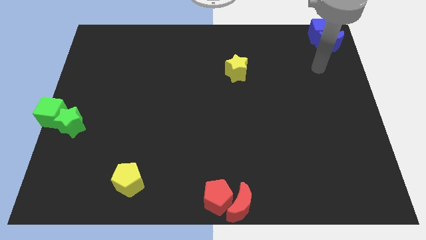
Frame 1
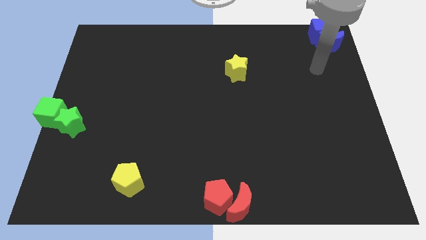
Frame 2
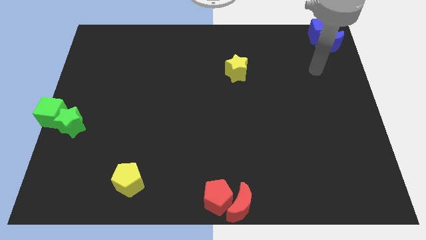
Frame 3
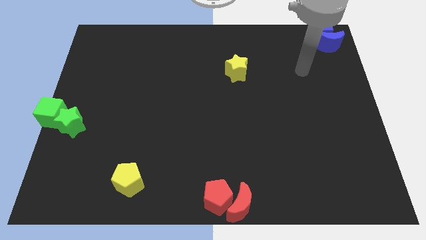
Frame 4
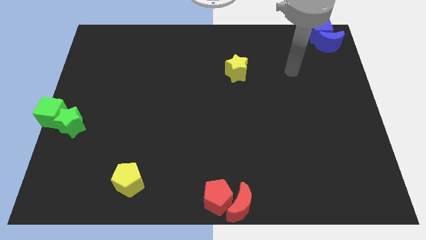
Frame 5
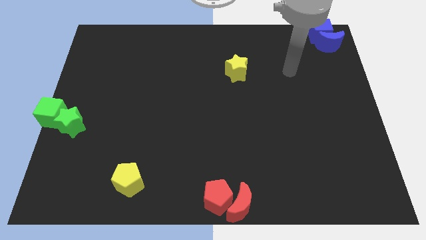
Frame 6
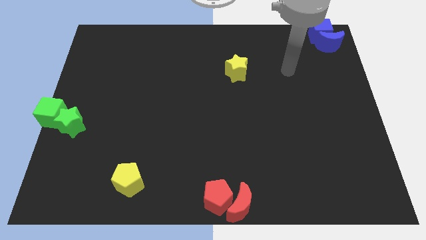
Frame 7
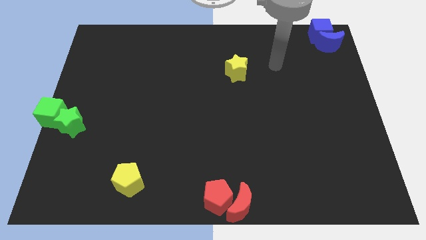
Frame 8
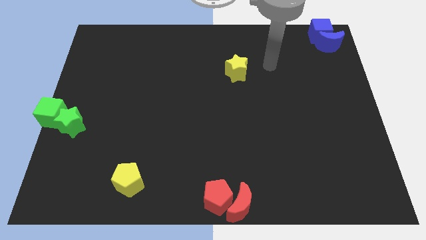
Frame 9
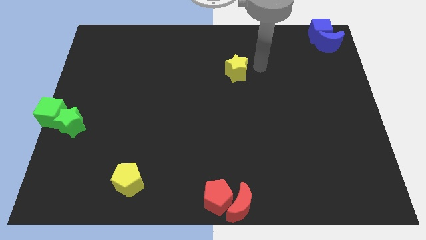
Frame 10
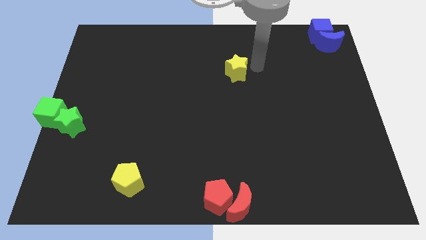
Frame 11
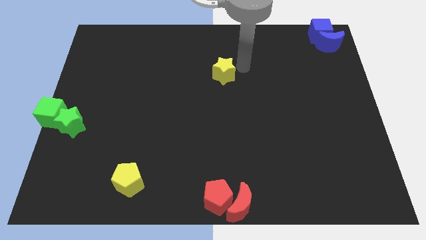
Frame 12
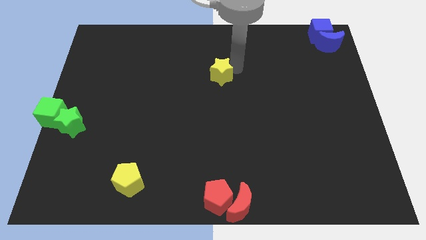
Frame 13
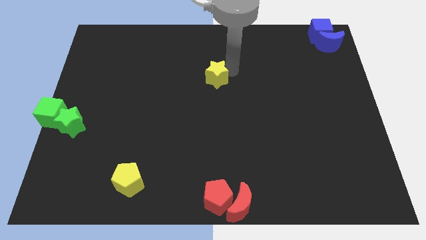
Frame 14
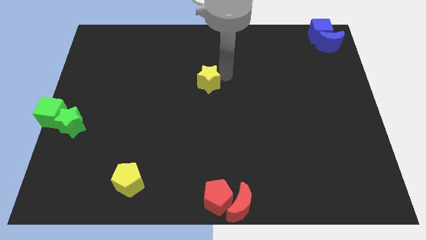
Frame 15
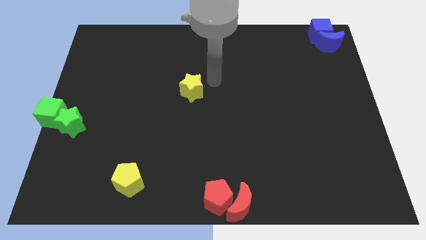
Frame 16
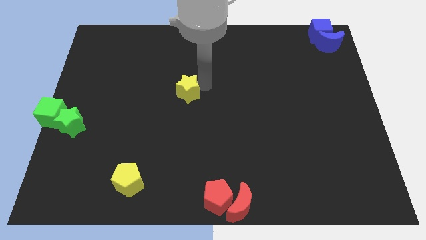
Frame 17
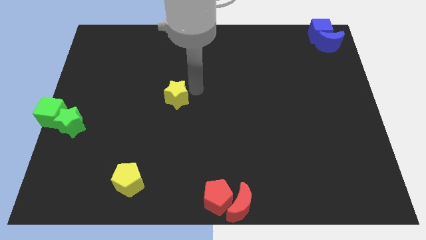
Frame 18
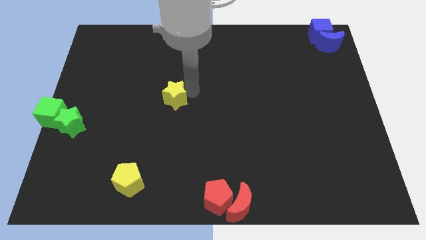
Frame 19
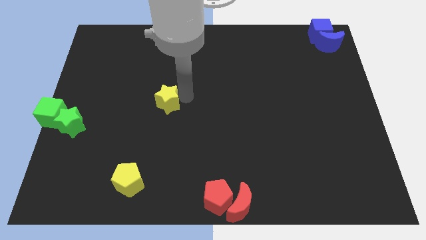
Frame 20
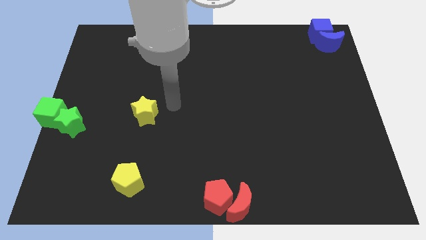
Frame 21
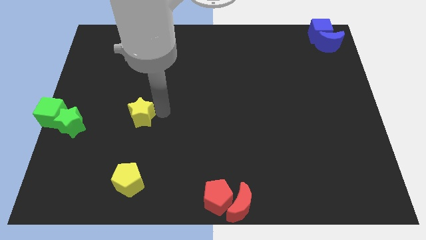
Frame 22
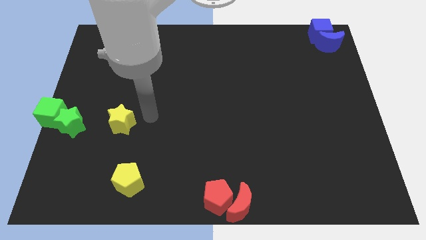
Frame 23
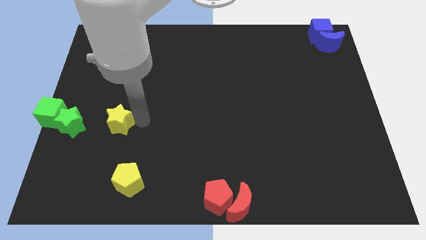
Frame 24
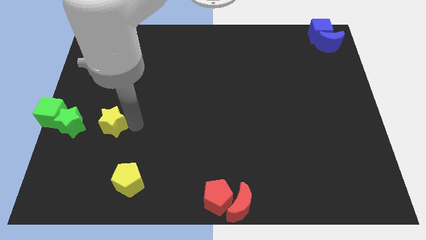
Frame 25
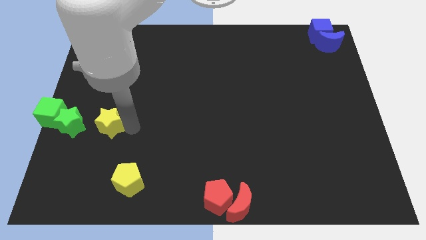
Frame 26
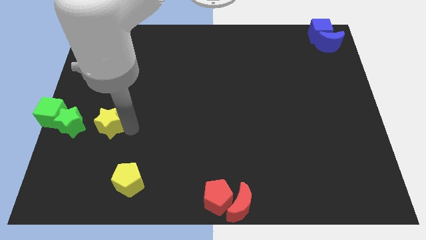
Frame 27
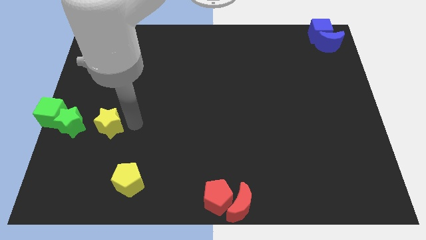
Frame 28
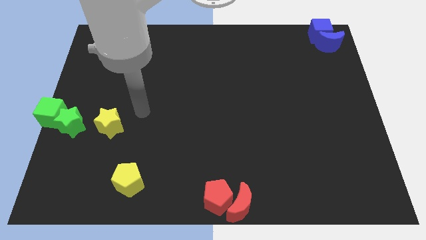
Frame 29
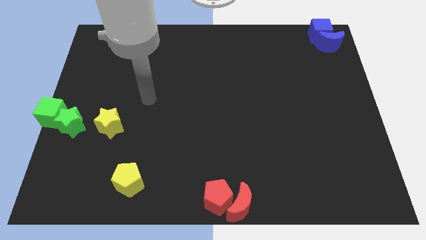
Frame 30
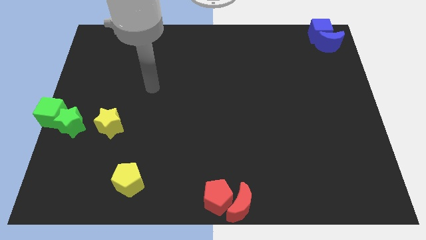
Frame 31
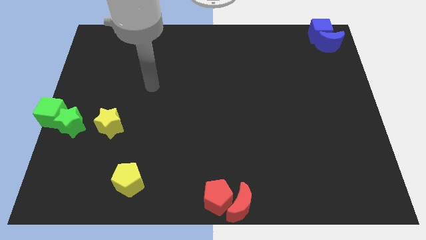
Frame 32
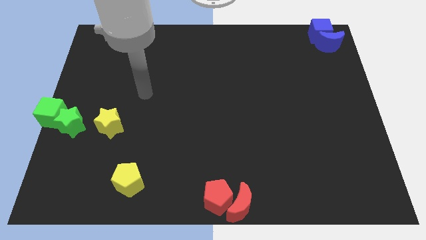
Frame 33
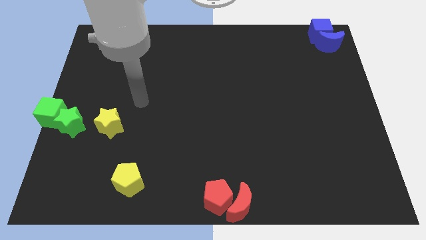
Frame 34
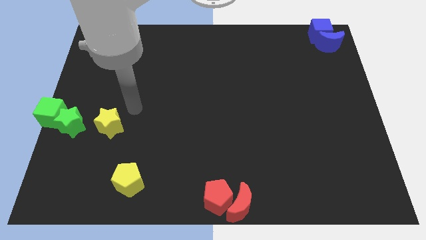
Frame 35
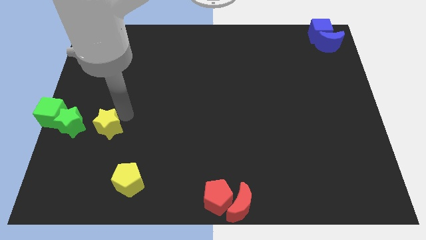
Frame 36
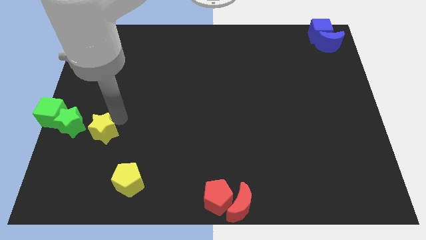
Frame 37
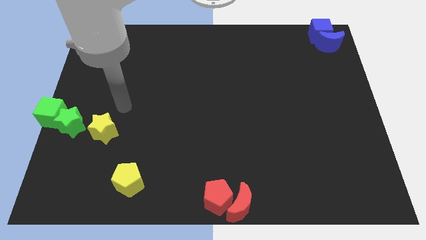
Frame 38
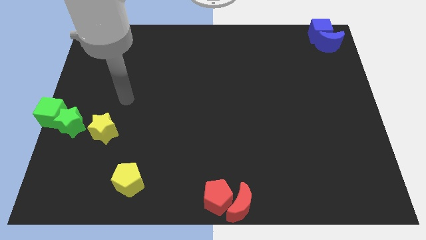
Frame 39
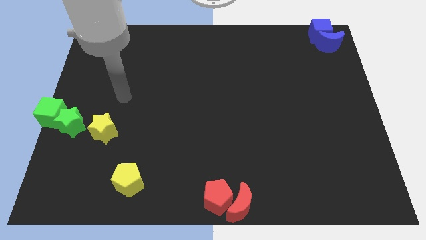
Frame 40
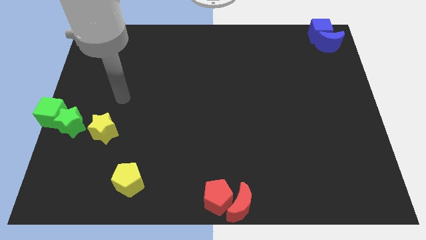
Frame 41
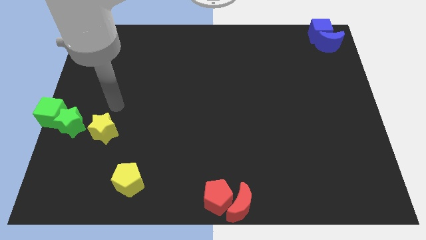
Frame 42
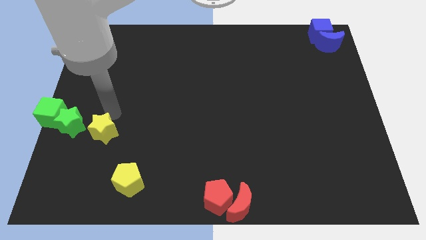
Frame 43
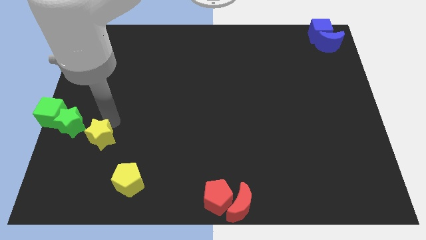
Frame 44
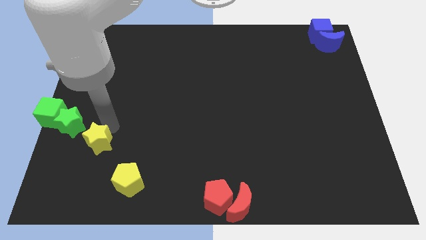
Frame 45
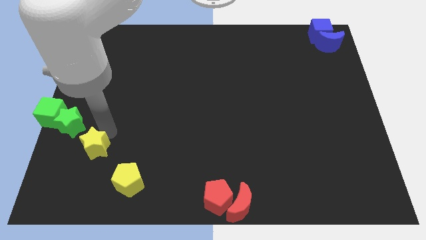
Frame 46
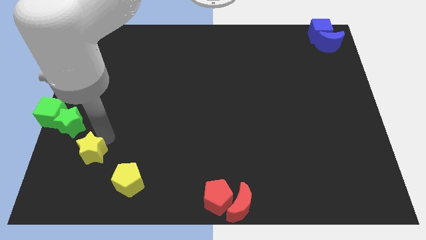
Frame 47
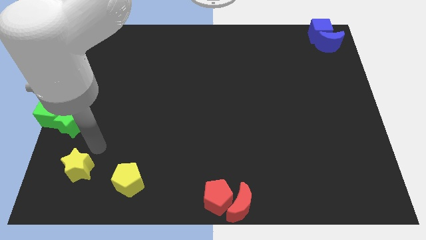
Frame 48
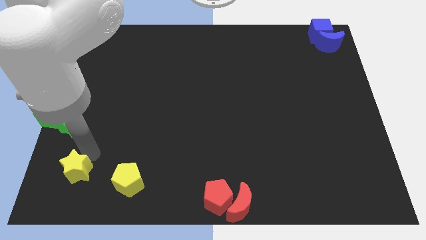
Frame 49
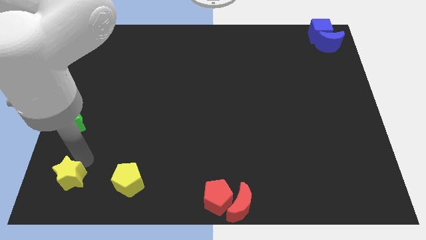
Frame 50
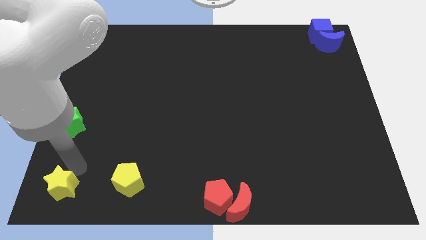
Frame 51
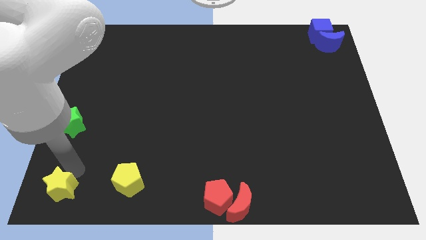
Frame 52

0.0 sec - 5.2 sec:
place the yellow star left to the yellow pentagon

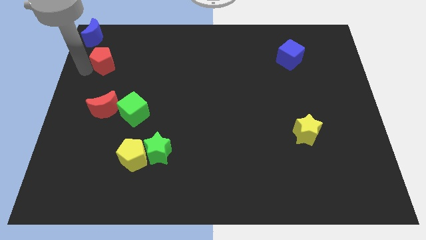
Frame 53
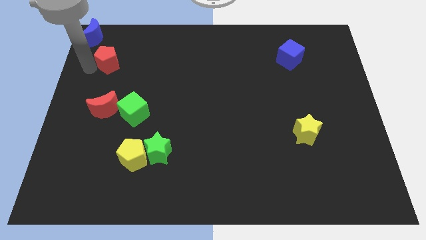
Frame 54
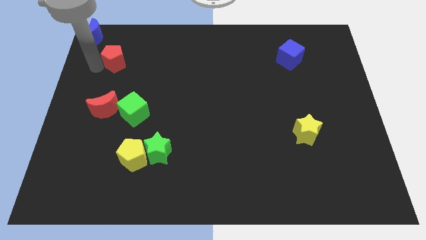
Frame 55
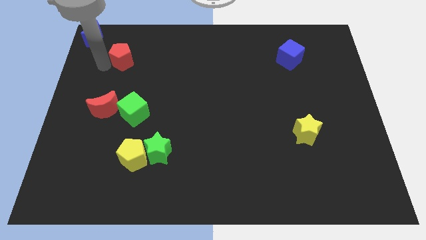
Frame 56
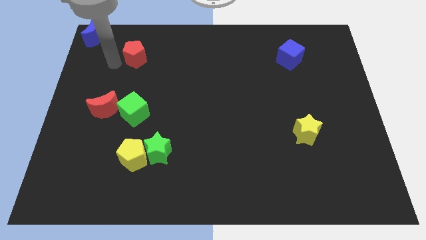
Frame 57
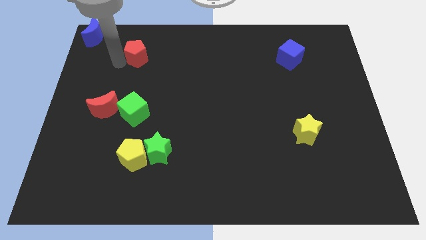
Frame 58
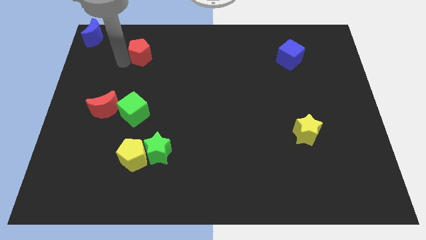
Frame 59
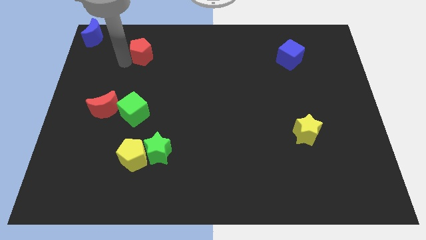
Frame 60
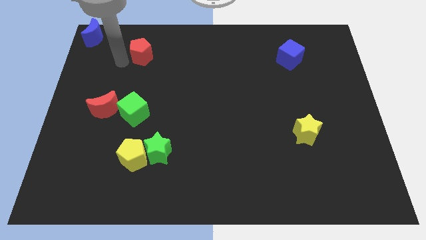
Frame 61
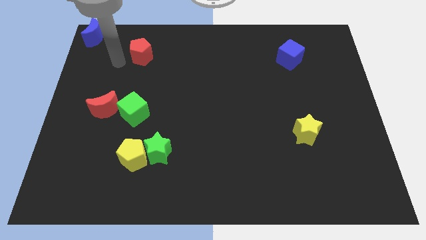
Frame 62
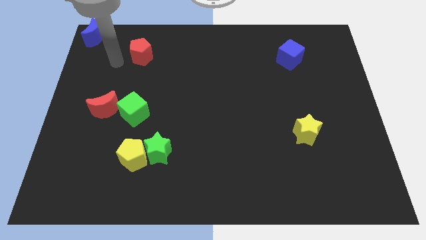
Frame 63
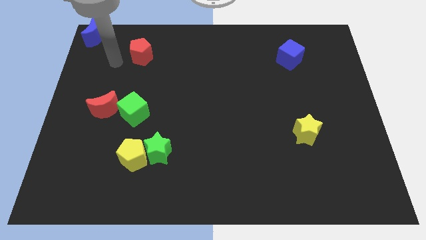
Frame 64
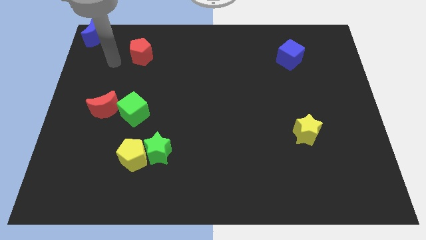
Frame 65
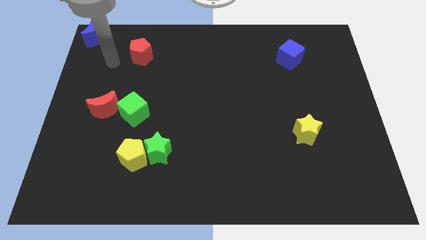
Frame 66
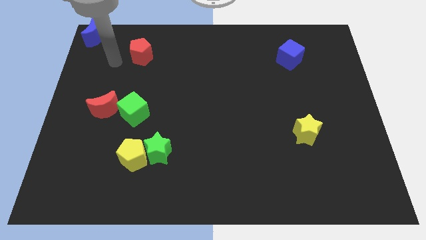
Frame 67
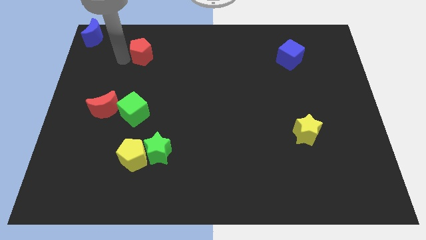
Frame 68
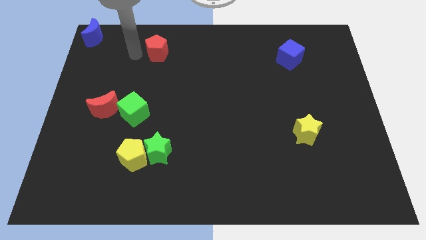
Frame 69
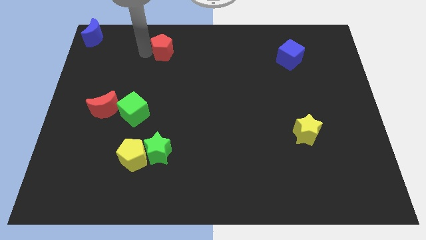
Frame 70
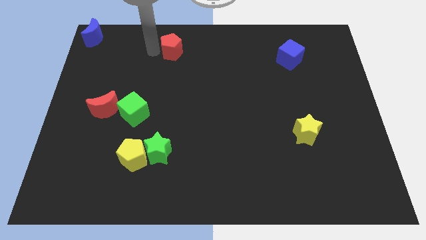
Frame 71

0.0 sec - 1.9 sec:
push the red pentagon towards the top center

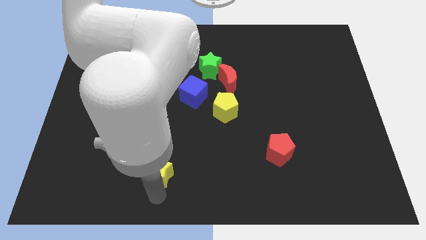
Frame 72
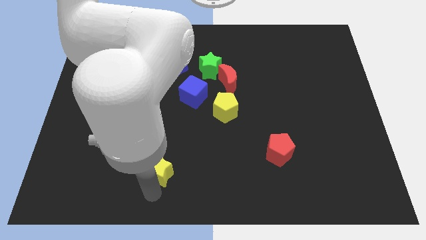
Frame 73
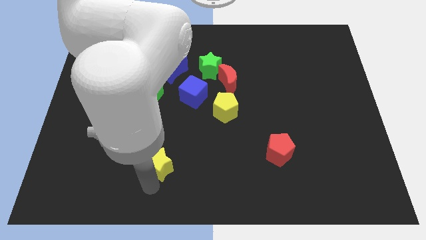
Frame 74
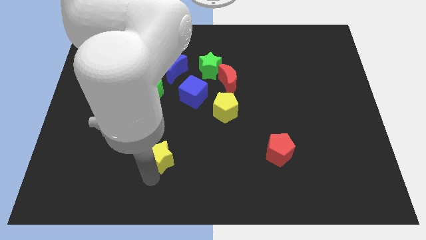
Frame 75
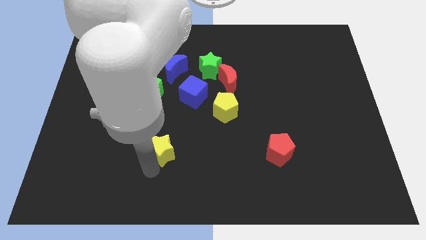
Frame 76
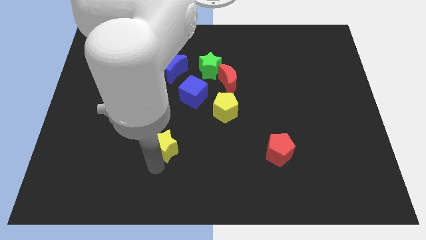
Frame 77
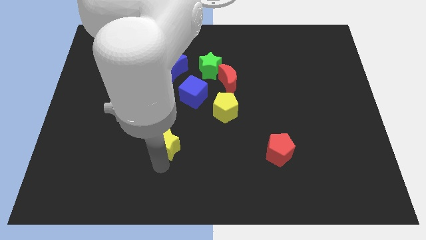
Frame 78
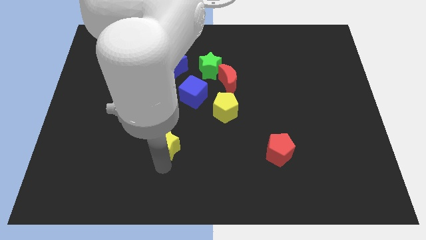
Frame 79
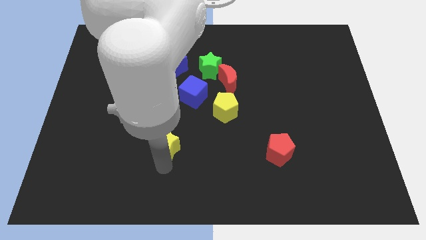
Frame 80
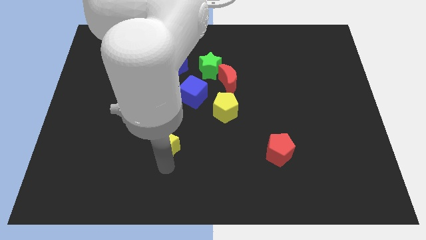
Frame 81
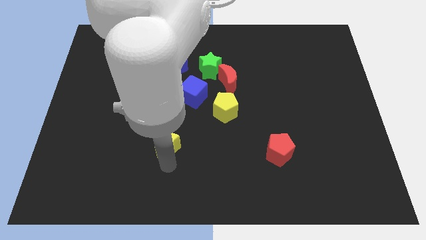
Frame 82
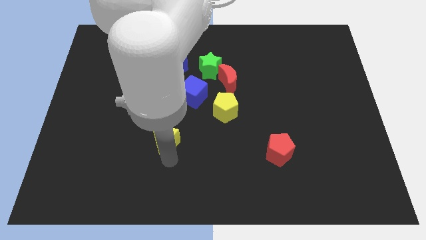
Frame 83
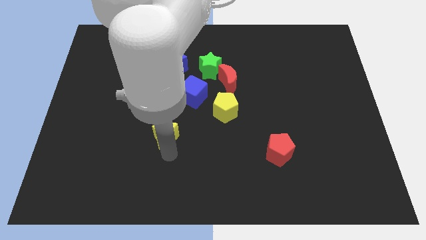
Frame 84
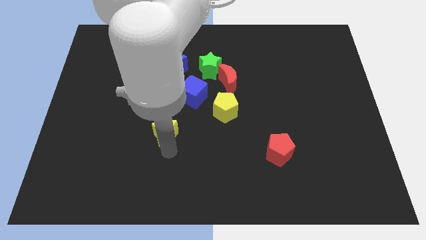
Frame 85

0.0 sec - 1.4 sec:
push the yellow star slightly to the top

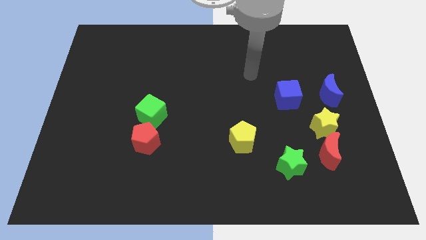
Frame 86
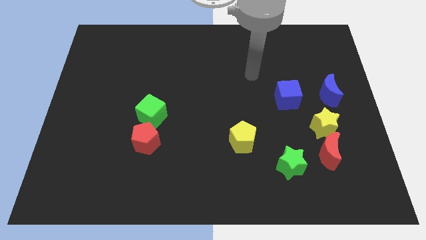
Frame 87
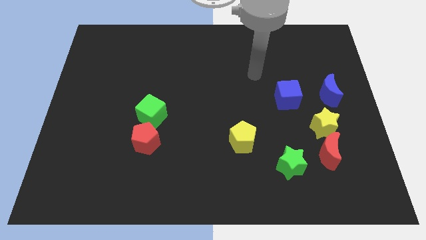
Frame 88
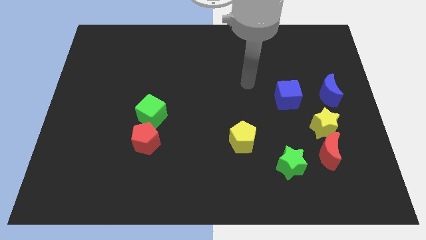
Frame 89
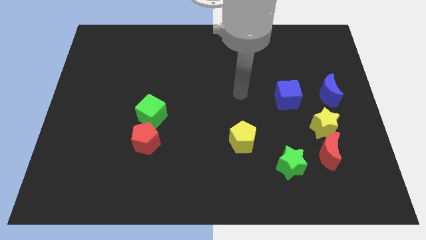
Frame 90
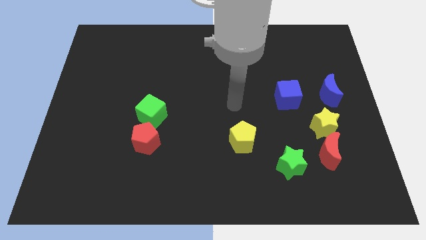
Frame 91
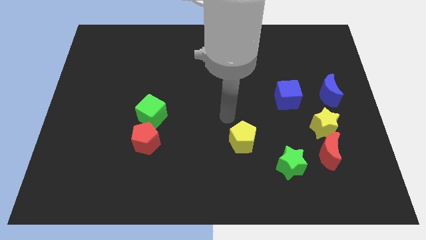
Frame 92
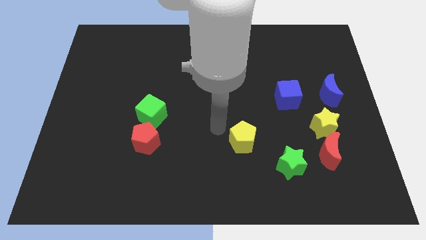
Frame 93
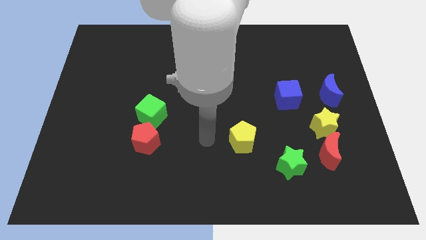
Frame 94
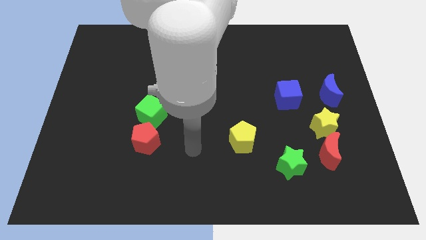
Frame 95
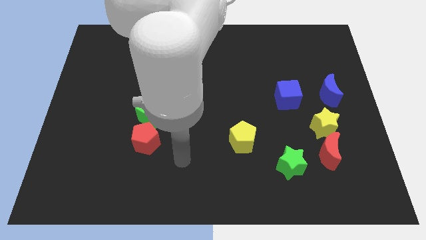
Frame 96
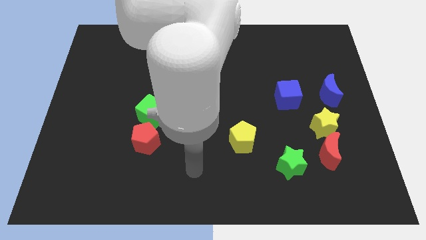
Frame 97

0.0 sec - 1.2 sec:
move your arm towards the bottom center of the board
